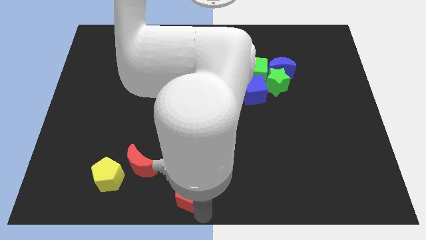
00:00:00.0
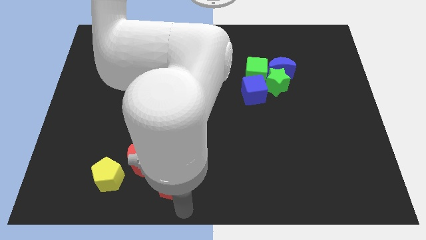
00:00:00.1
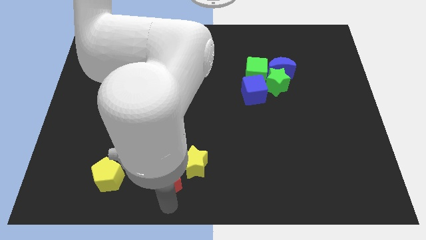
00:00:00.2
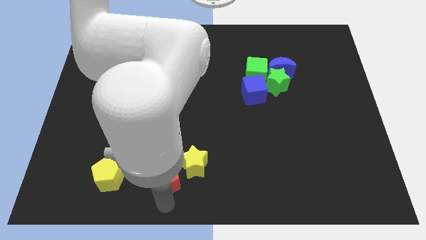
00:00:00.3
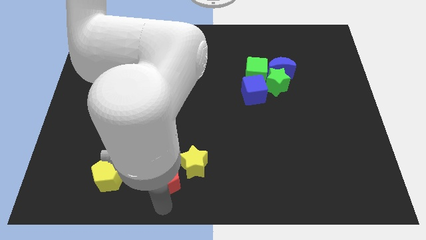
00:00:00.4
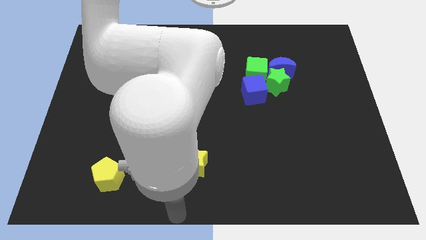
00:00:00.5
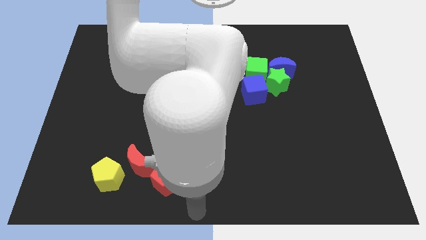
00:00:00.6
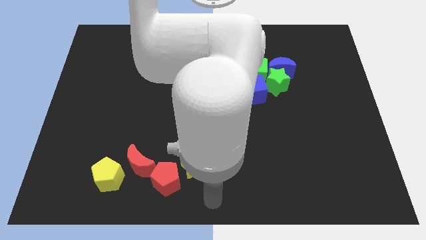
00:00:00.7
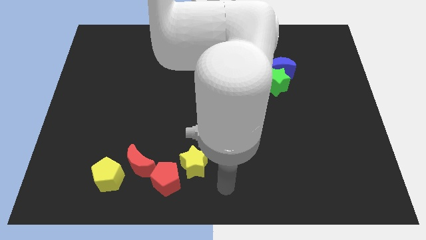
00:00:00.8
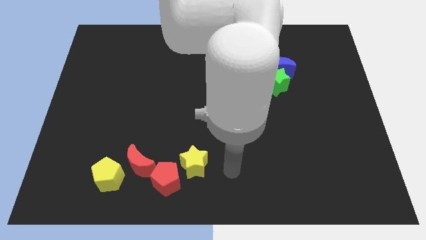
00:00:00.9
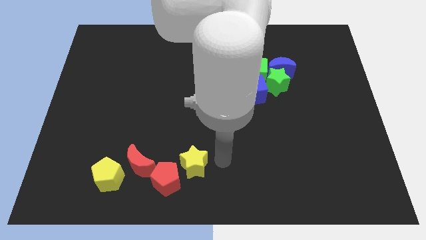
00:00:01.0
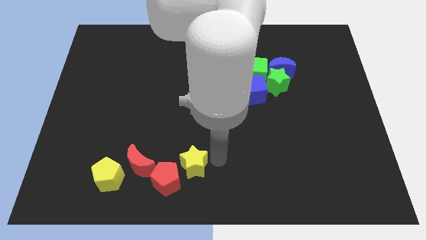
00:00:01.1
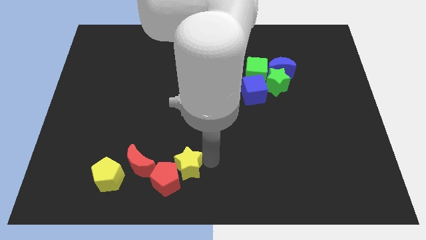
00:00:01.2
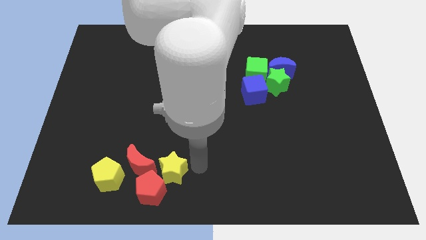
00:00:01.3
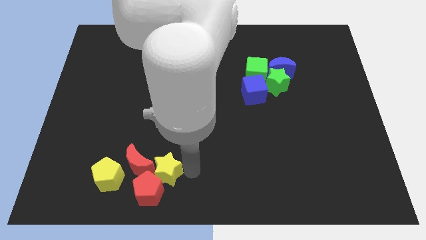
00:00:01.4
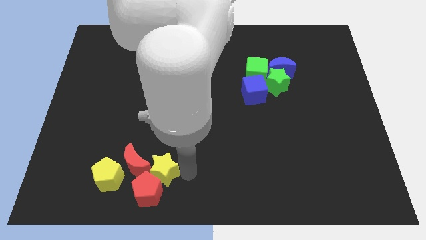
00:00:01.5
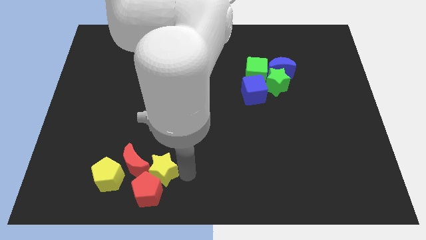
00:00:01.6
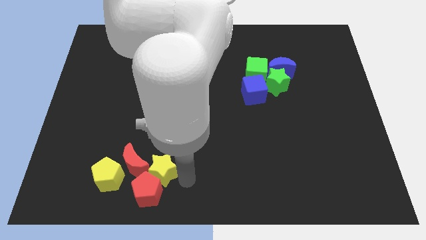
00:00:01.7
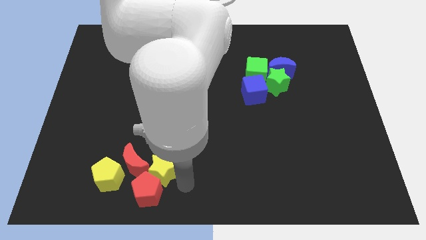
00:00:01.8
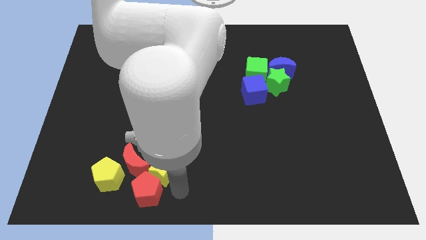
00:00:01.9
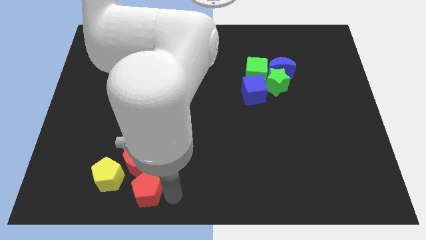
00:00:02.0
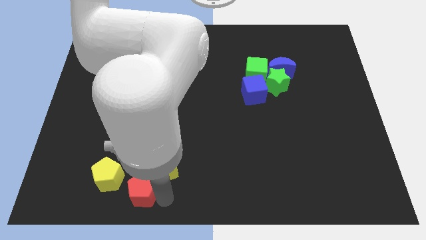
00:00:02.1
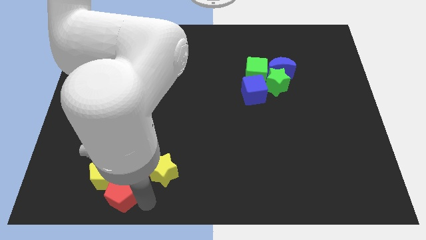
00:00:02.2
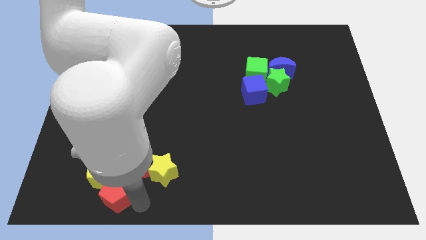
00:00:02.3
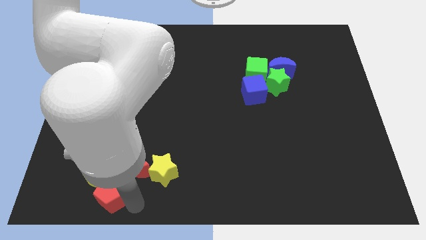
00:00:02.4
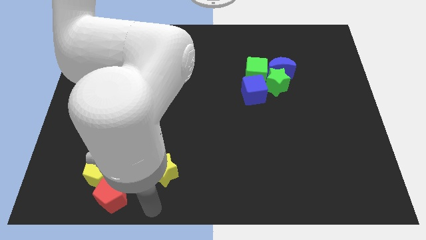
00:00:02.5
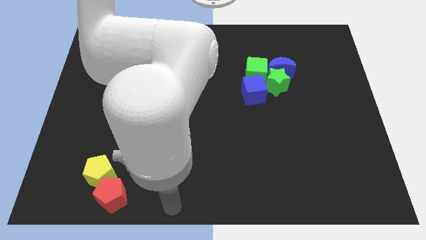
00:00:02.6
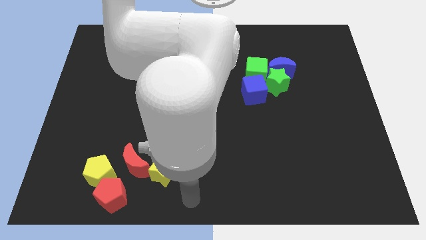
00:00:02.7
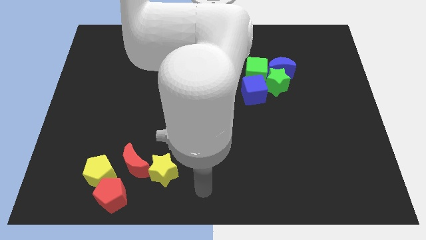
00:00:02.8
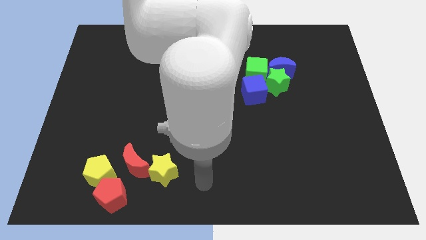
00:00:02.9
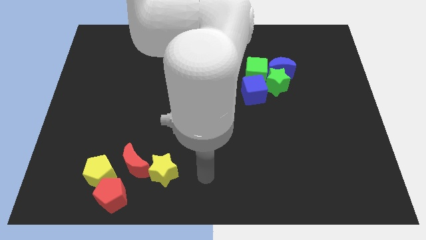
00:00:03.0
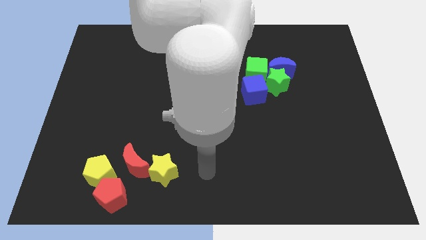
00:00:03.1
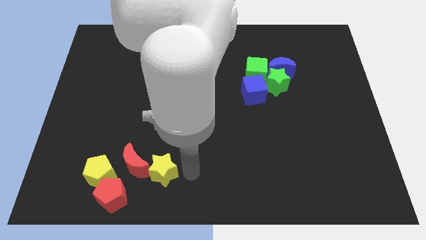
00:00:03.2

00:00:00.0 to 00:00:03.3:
slide the red pentagon to the bottom right to the yellow pentagon

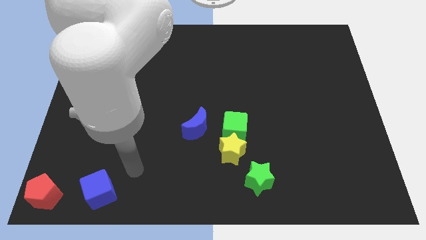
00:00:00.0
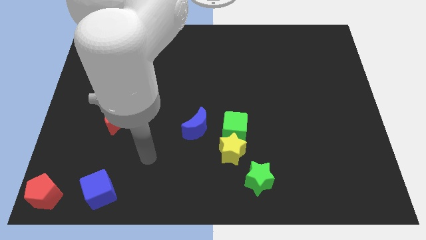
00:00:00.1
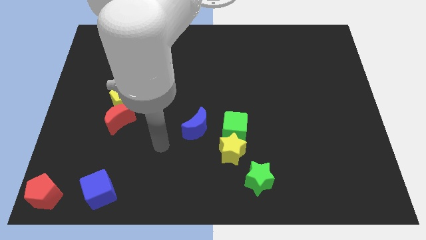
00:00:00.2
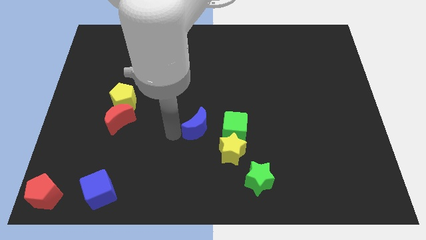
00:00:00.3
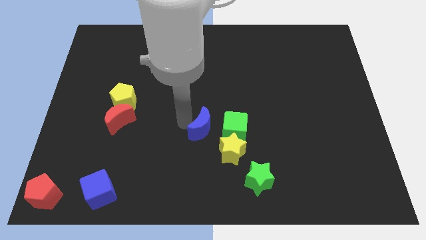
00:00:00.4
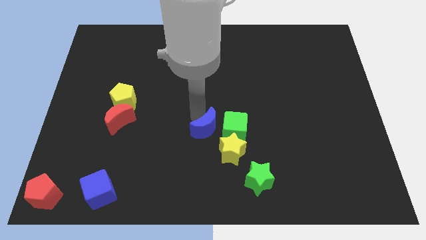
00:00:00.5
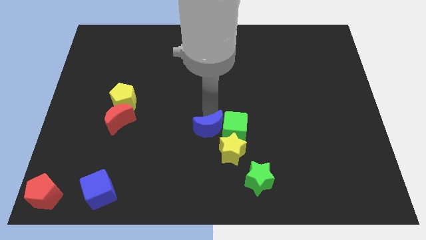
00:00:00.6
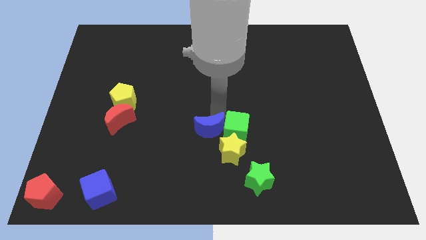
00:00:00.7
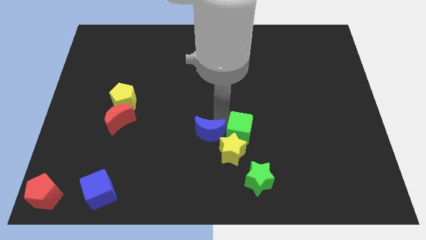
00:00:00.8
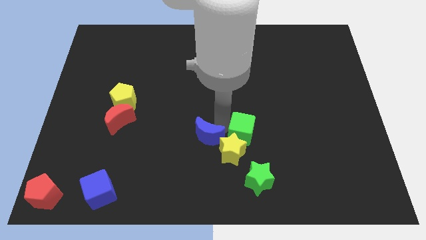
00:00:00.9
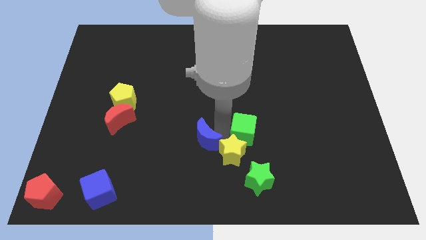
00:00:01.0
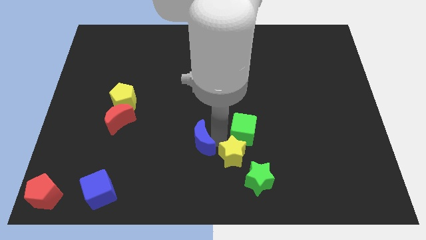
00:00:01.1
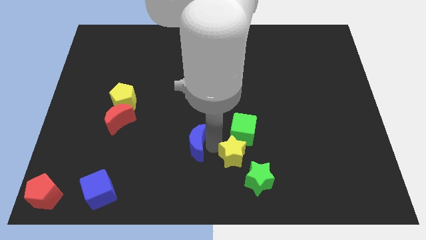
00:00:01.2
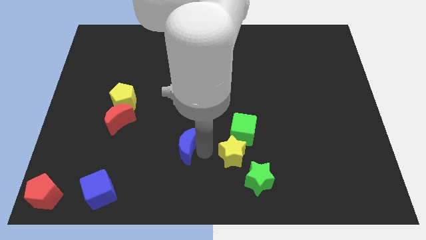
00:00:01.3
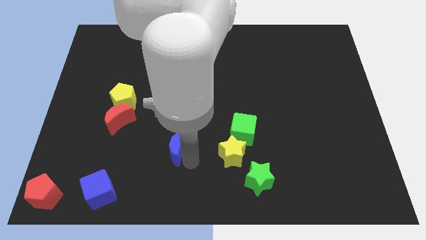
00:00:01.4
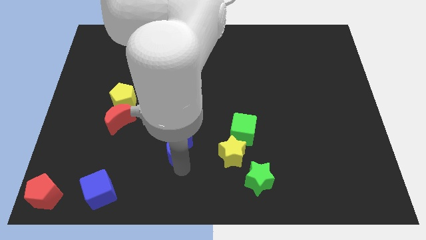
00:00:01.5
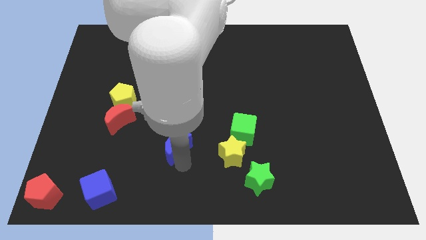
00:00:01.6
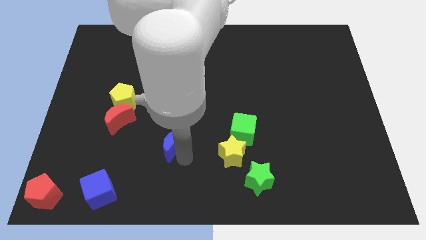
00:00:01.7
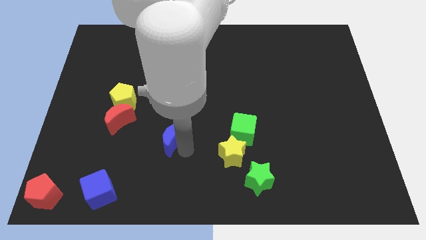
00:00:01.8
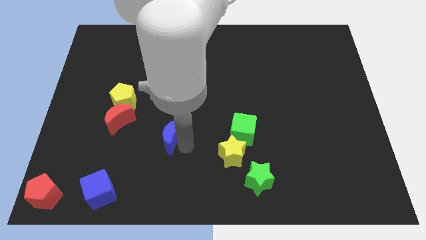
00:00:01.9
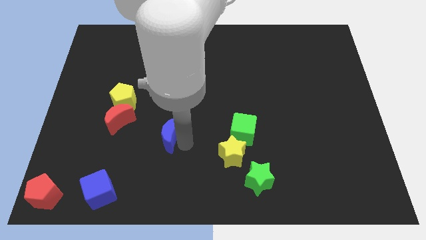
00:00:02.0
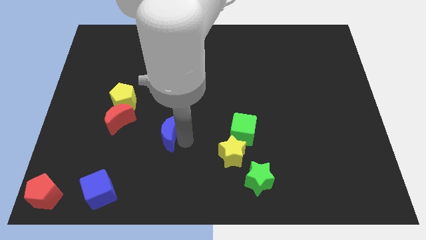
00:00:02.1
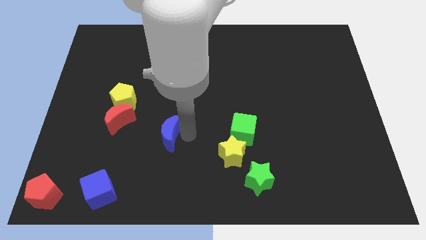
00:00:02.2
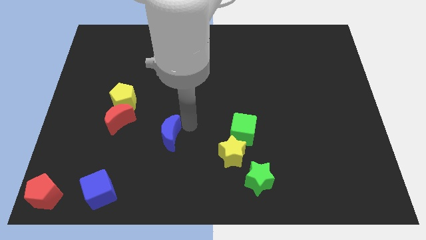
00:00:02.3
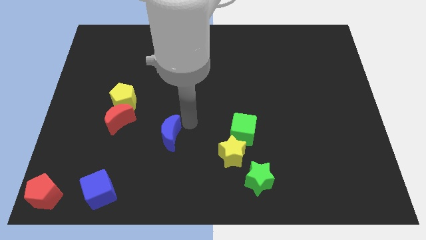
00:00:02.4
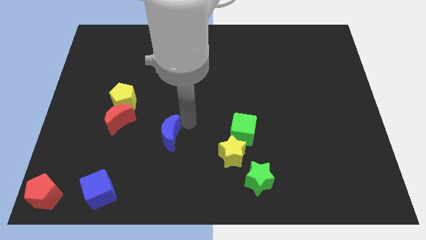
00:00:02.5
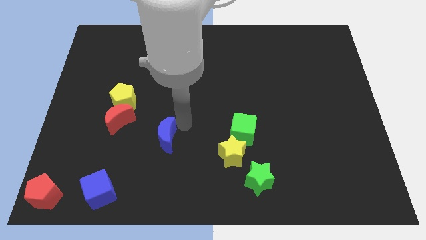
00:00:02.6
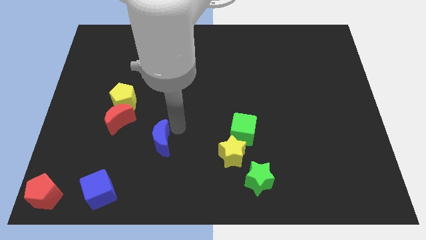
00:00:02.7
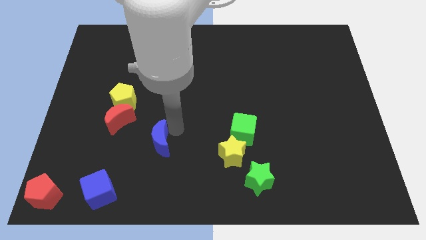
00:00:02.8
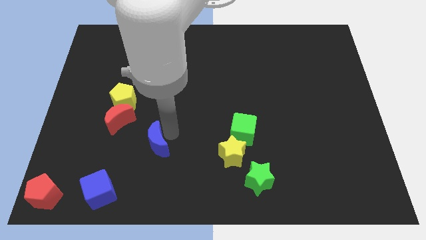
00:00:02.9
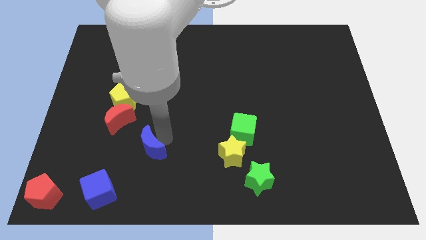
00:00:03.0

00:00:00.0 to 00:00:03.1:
move the blue crescent diagonal to the blue cube

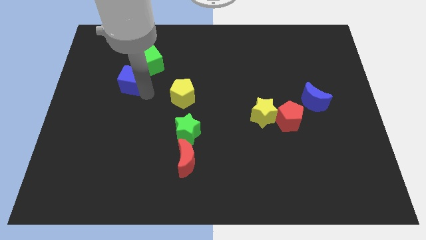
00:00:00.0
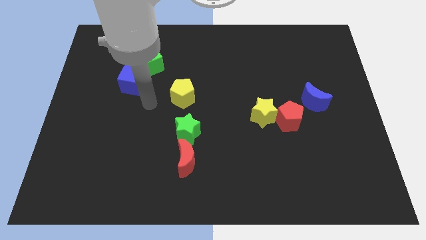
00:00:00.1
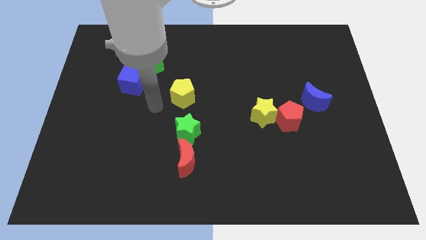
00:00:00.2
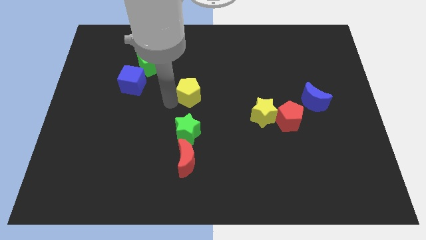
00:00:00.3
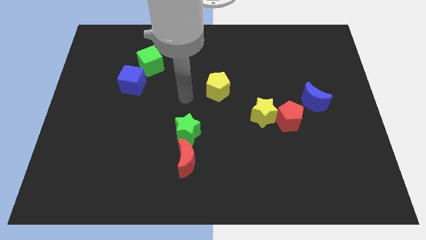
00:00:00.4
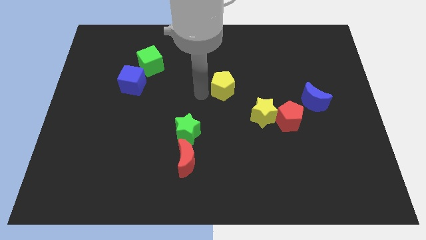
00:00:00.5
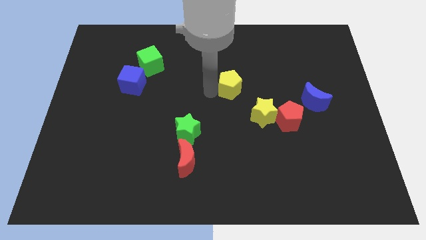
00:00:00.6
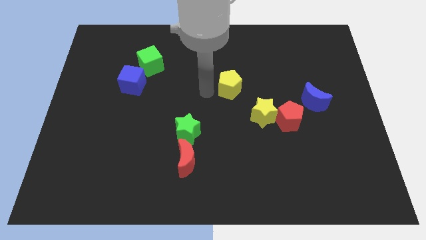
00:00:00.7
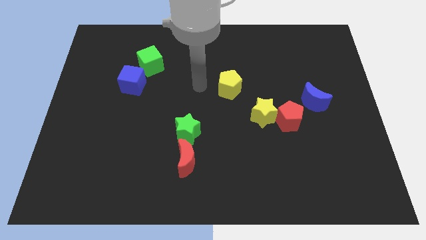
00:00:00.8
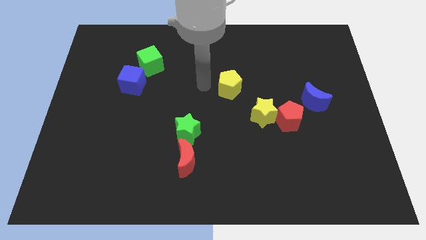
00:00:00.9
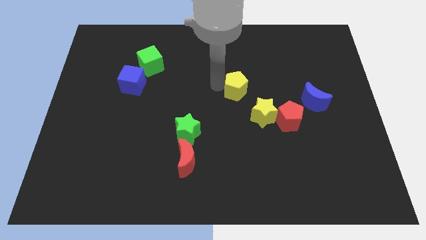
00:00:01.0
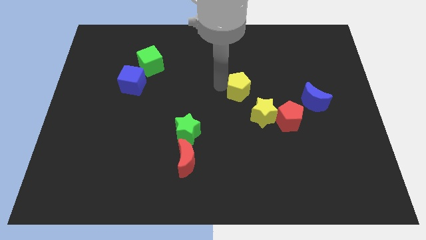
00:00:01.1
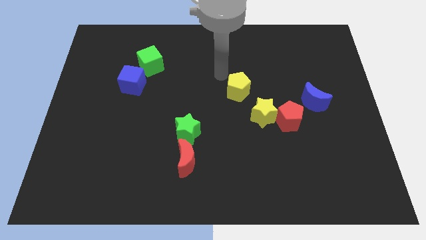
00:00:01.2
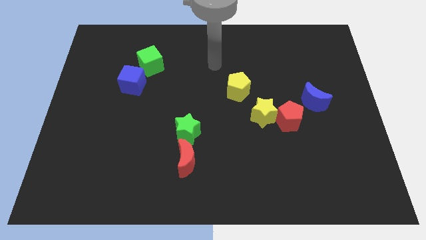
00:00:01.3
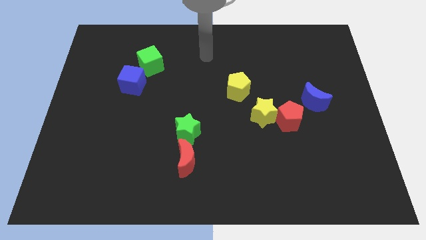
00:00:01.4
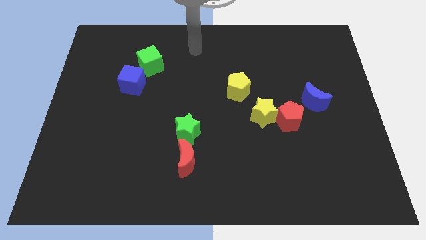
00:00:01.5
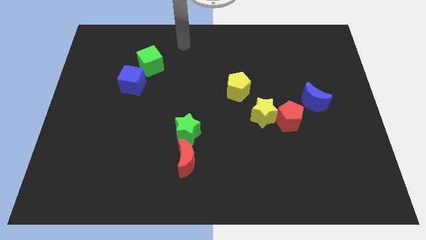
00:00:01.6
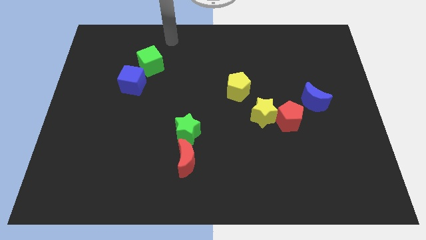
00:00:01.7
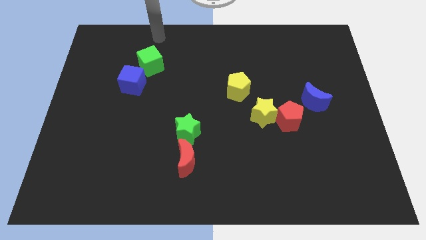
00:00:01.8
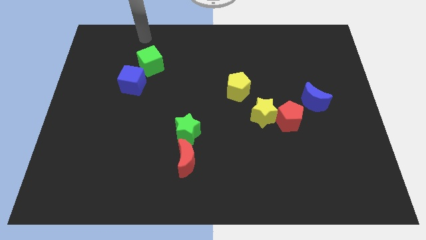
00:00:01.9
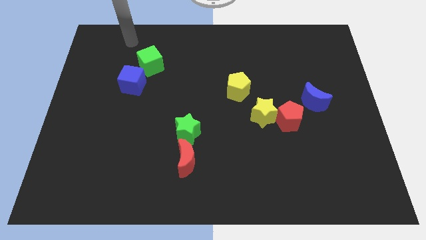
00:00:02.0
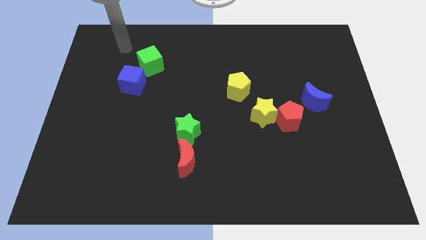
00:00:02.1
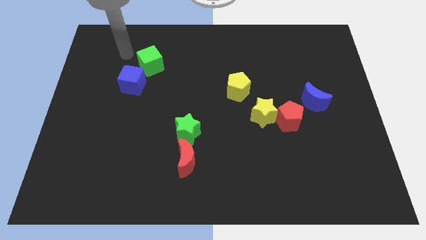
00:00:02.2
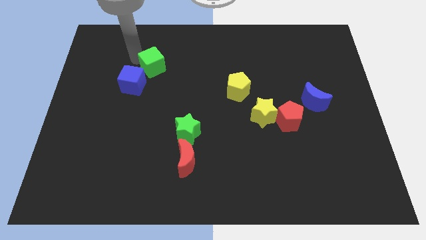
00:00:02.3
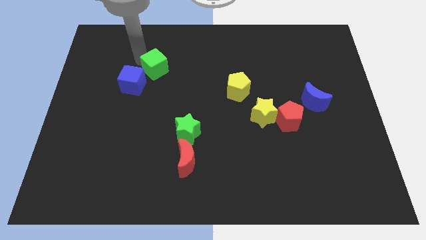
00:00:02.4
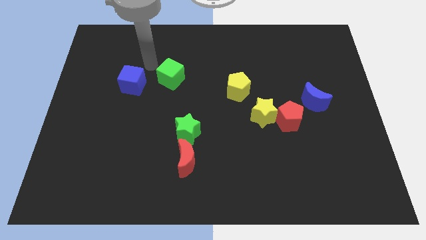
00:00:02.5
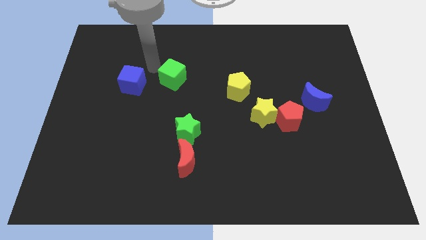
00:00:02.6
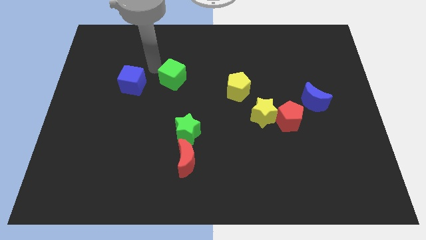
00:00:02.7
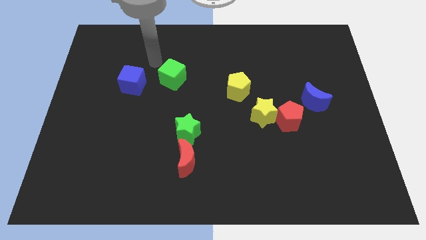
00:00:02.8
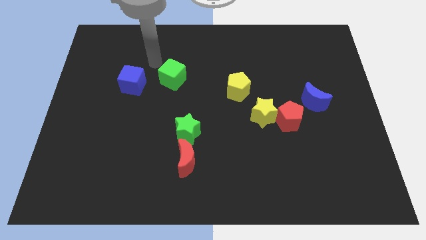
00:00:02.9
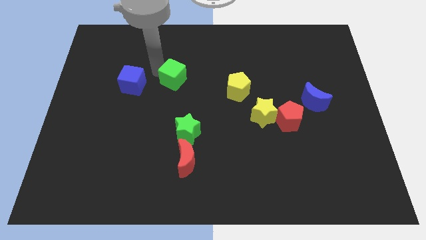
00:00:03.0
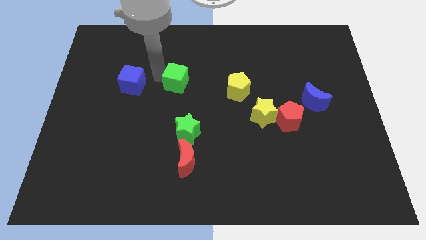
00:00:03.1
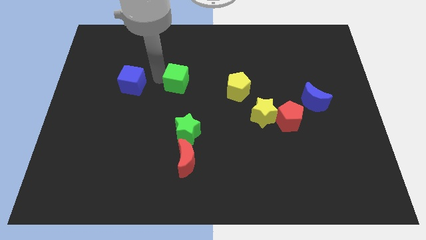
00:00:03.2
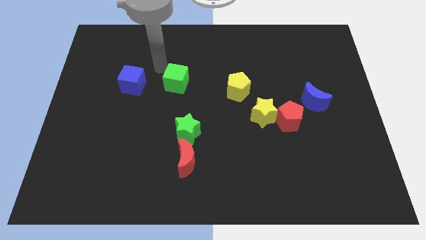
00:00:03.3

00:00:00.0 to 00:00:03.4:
place the green cube to the right side of the blue cube
